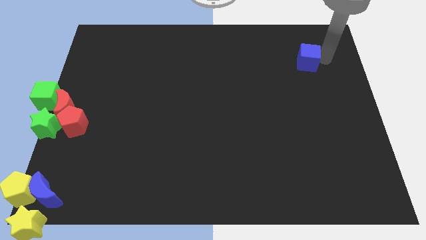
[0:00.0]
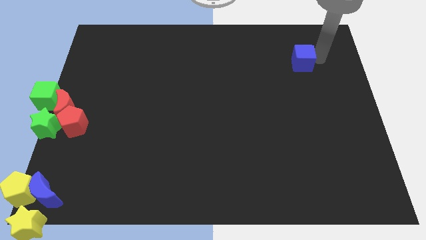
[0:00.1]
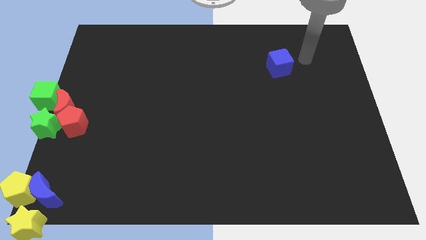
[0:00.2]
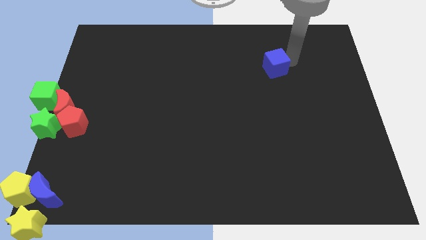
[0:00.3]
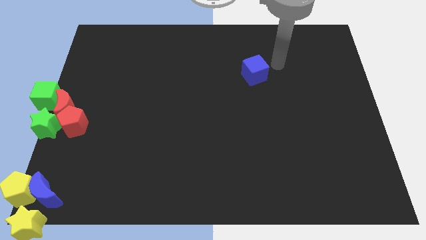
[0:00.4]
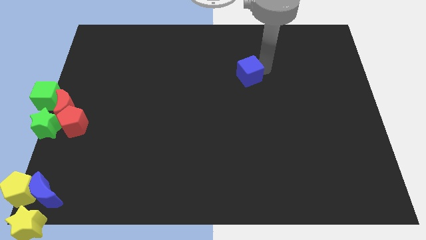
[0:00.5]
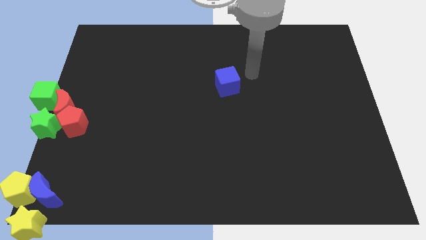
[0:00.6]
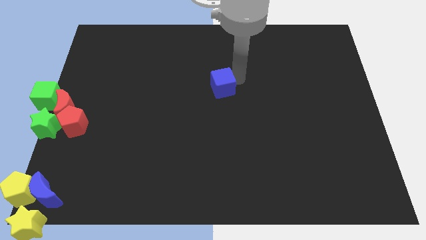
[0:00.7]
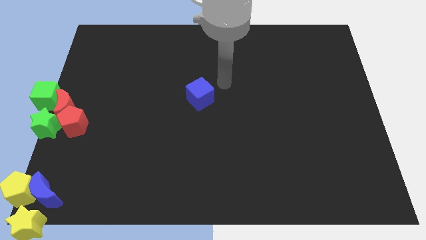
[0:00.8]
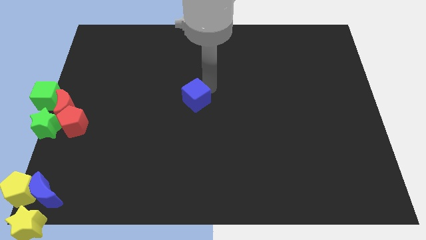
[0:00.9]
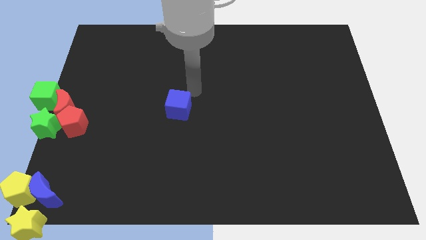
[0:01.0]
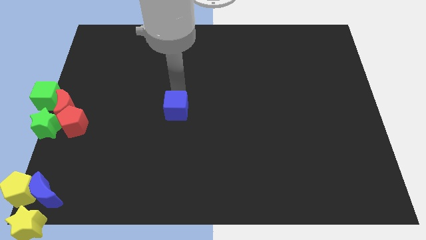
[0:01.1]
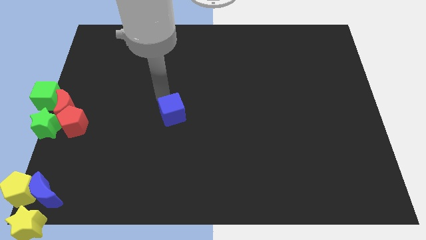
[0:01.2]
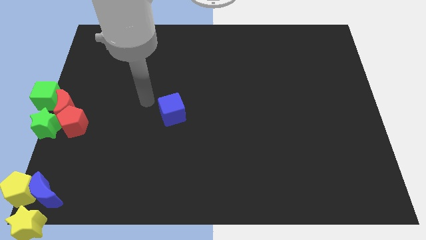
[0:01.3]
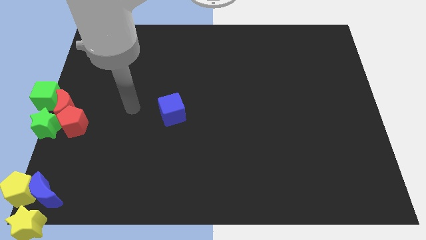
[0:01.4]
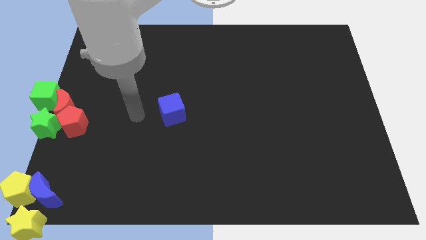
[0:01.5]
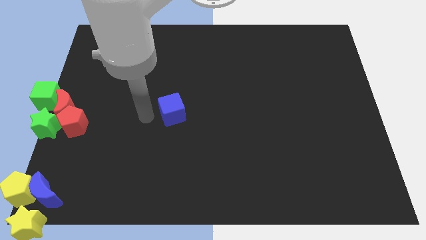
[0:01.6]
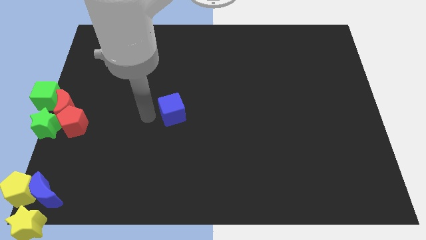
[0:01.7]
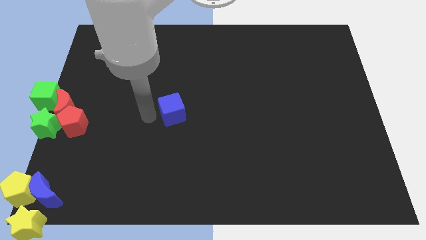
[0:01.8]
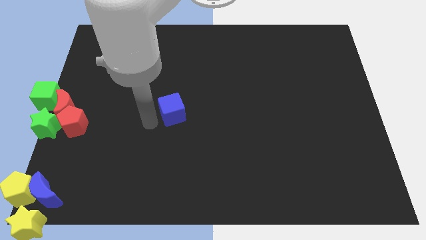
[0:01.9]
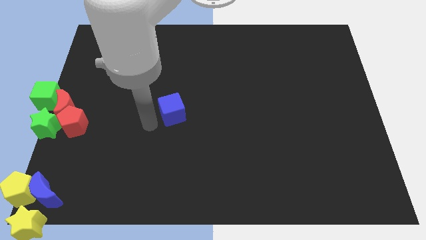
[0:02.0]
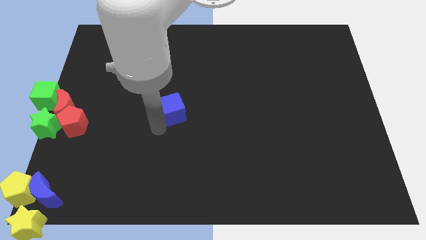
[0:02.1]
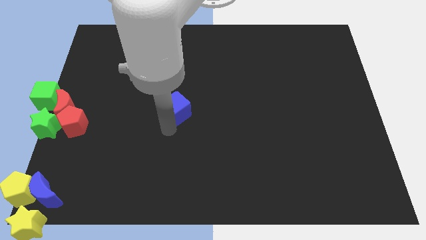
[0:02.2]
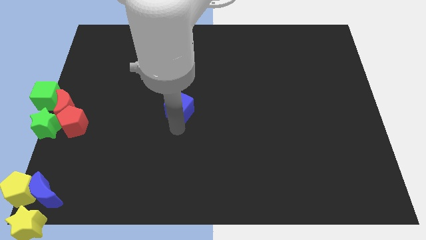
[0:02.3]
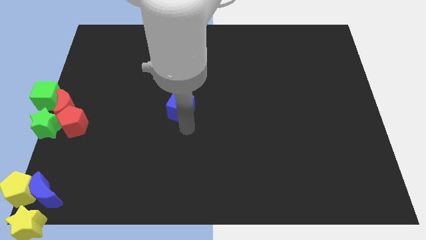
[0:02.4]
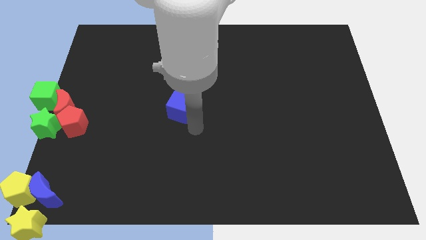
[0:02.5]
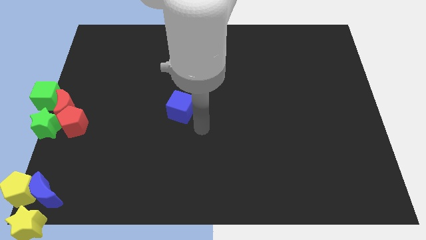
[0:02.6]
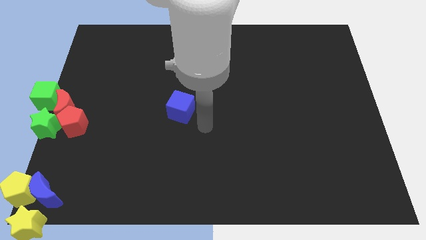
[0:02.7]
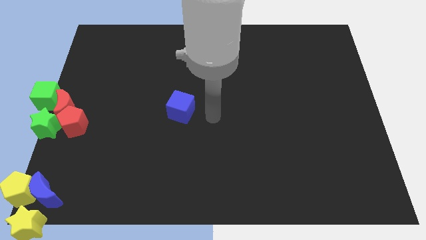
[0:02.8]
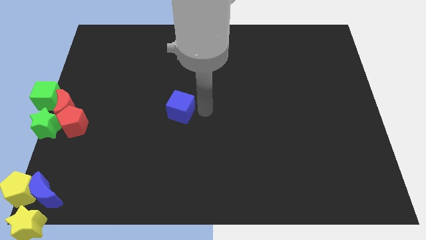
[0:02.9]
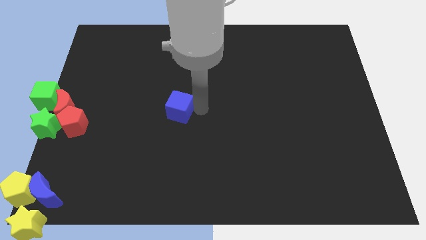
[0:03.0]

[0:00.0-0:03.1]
push blue cube towards the center of the board

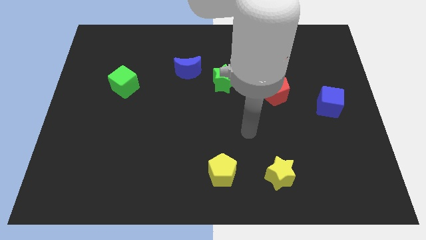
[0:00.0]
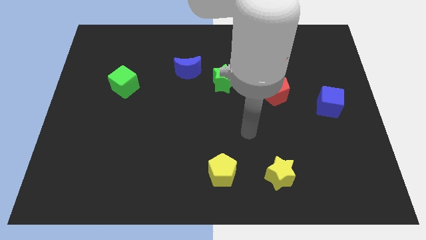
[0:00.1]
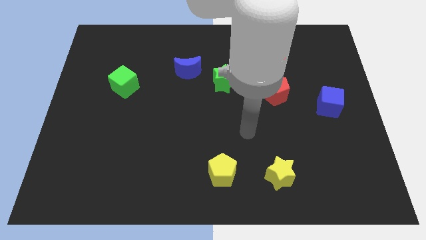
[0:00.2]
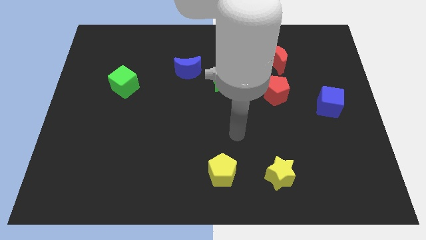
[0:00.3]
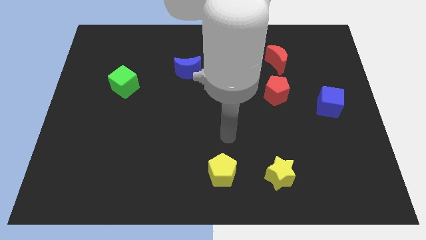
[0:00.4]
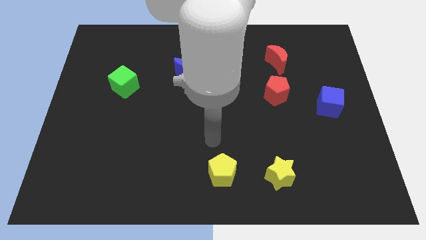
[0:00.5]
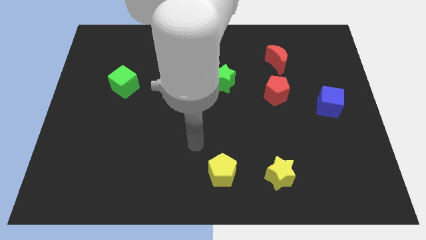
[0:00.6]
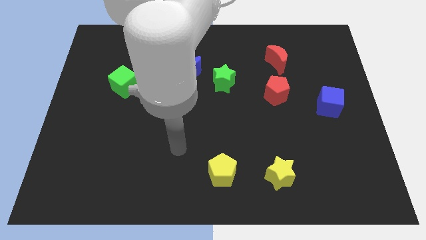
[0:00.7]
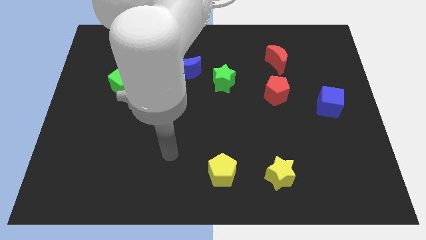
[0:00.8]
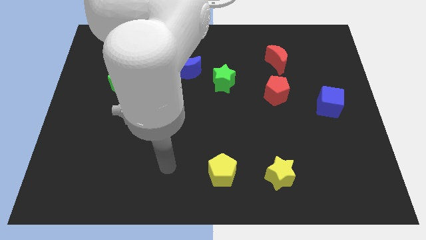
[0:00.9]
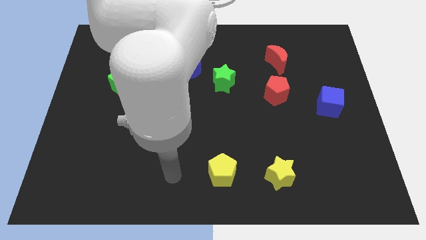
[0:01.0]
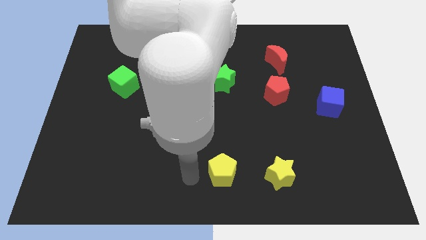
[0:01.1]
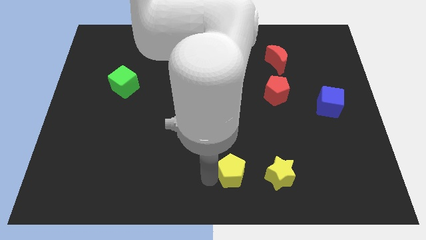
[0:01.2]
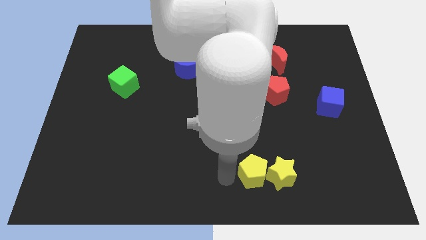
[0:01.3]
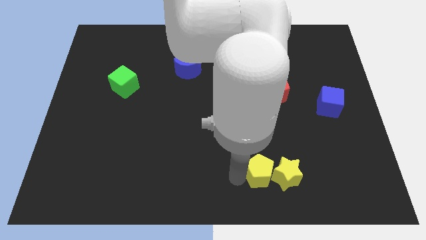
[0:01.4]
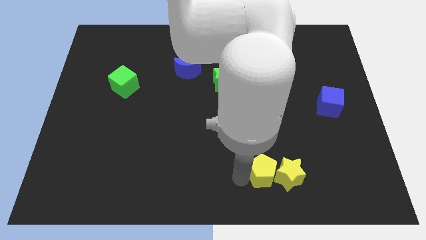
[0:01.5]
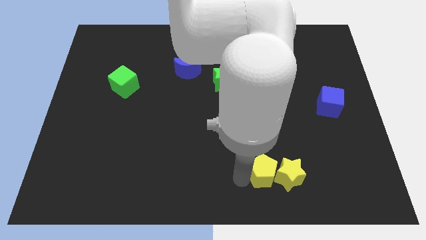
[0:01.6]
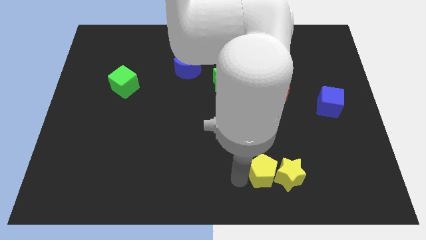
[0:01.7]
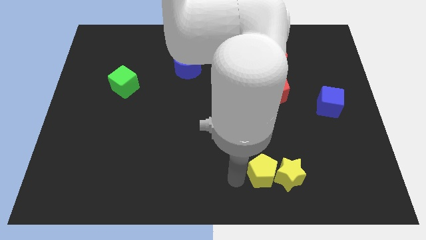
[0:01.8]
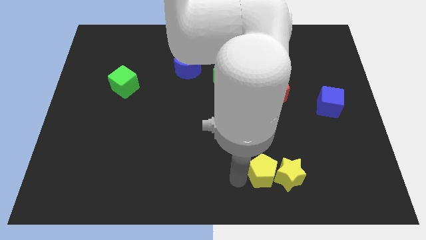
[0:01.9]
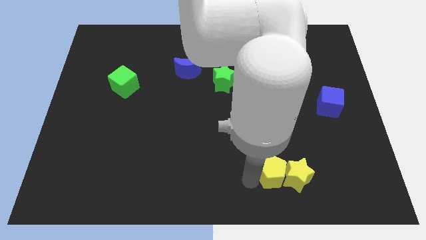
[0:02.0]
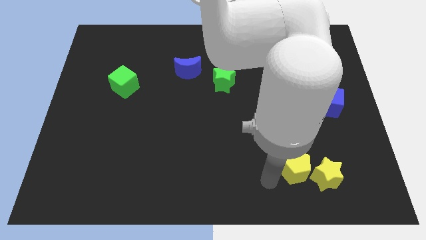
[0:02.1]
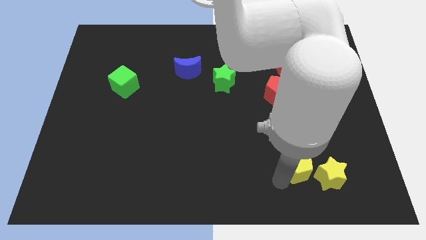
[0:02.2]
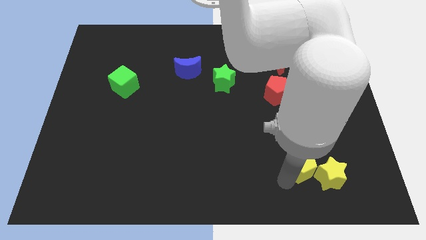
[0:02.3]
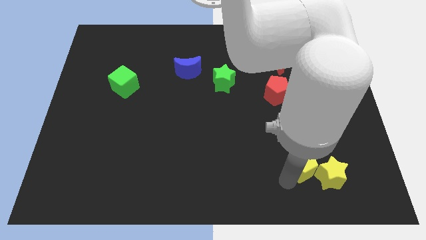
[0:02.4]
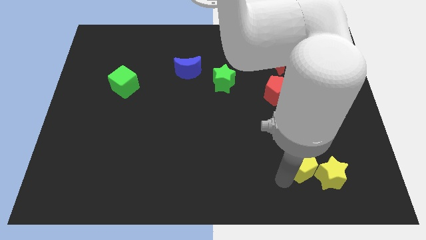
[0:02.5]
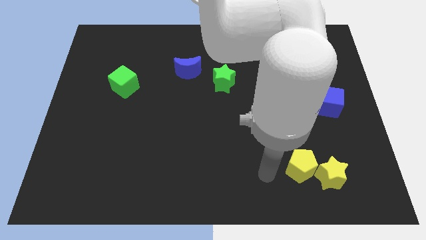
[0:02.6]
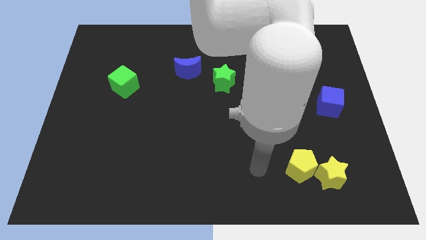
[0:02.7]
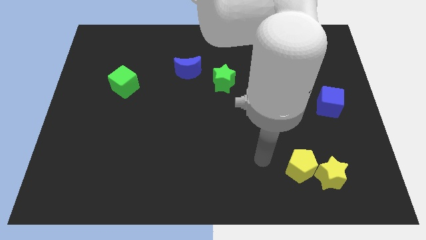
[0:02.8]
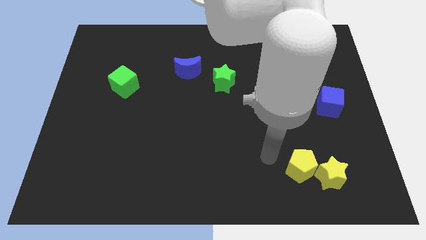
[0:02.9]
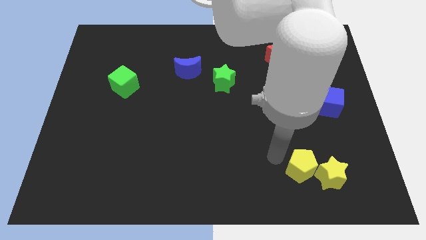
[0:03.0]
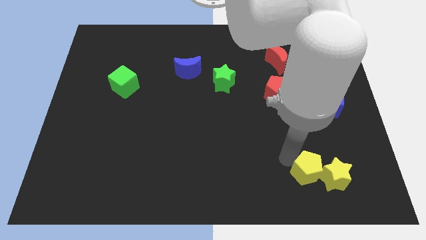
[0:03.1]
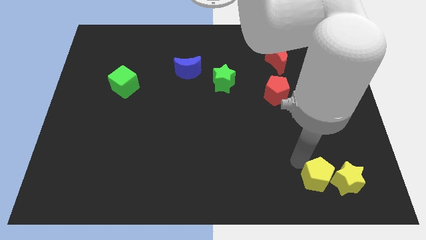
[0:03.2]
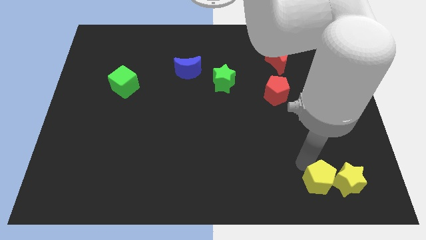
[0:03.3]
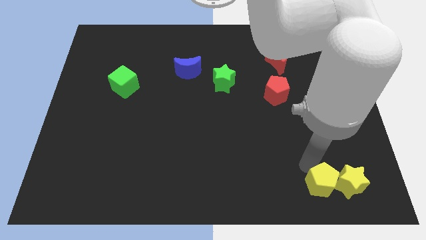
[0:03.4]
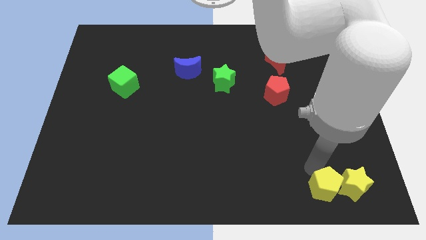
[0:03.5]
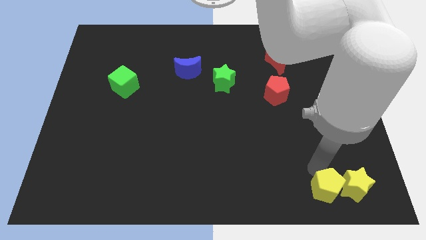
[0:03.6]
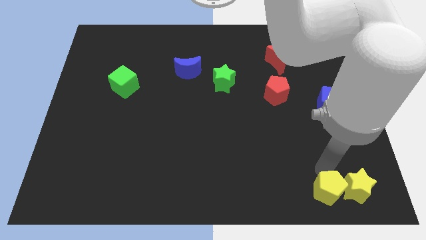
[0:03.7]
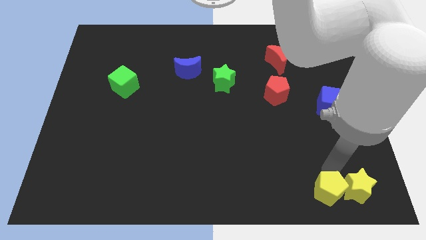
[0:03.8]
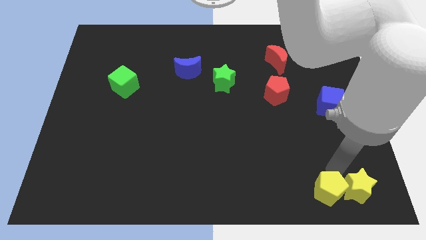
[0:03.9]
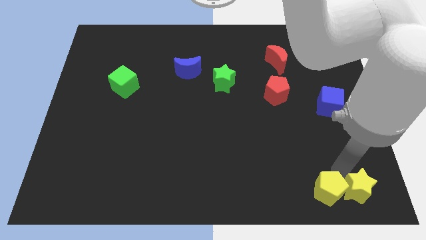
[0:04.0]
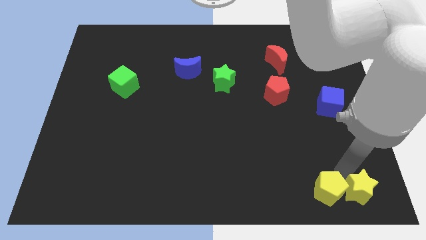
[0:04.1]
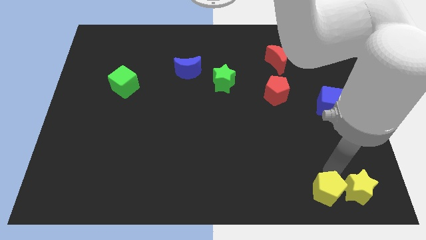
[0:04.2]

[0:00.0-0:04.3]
push the yellow blocks towards the bottom right

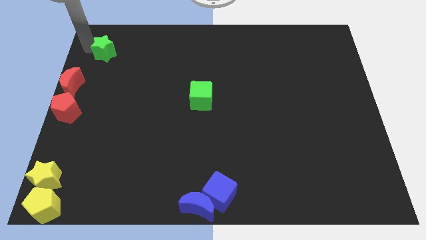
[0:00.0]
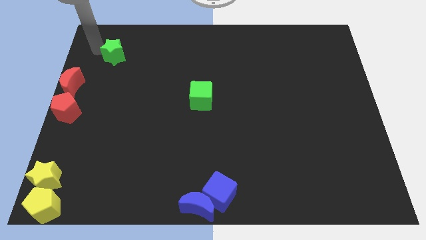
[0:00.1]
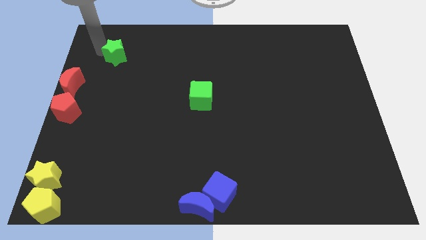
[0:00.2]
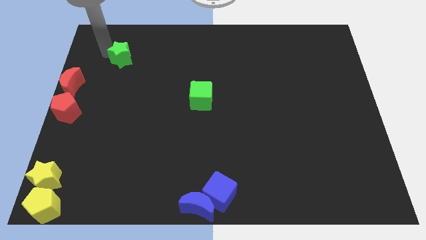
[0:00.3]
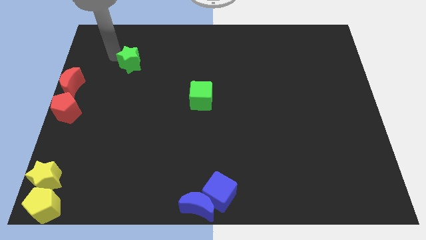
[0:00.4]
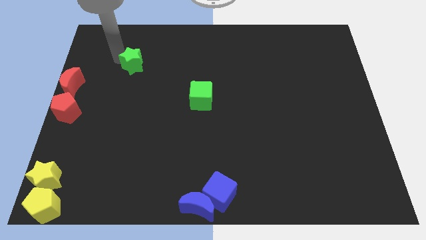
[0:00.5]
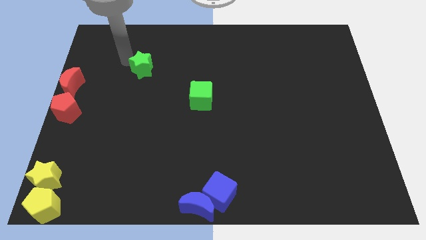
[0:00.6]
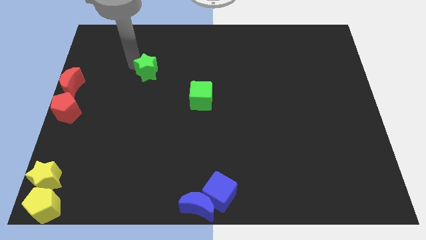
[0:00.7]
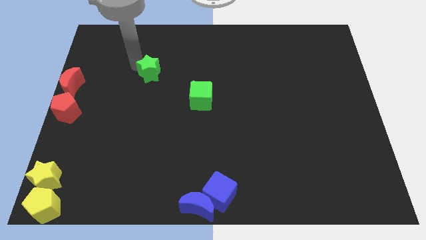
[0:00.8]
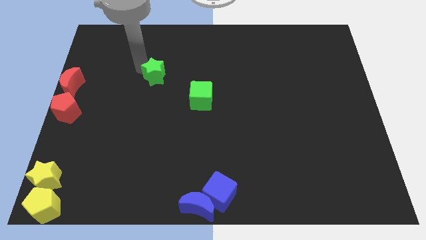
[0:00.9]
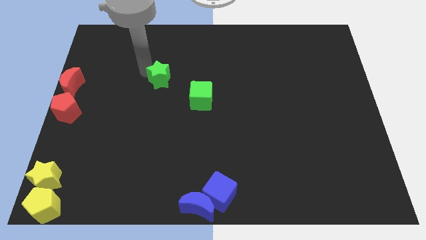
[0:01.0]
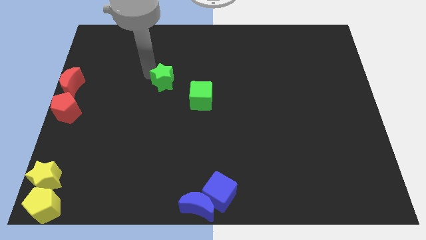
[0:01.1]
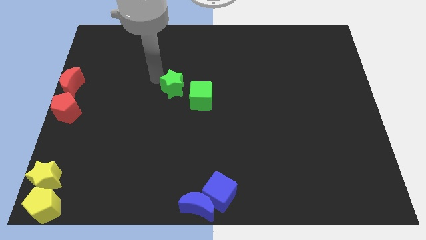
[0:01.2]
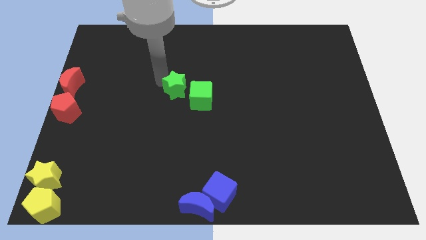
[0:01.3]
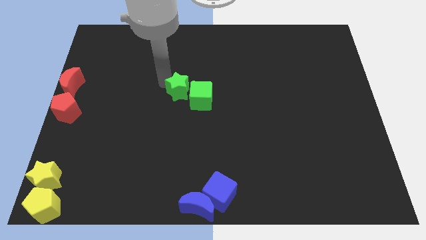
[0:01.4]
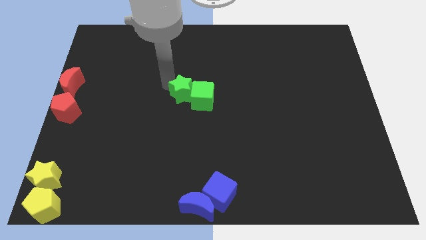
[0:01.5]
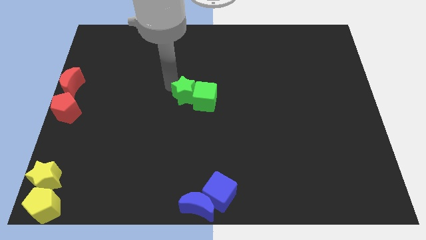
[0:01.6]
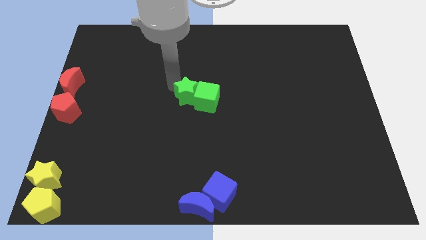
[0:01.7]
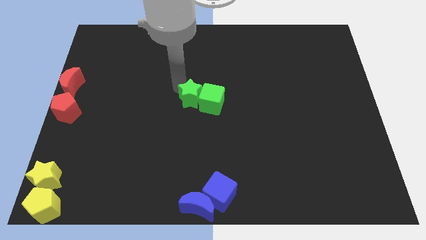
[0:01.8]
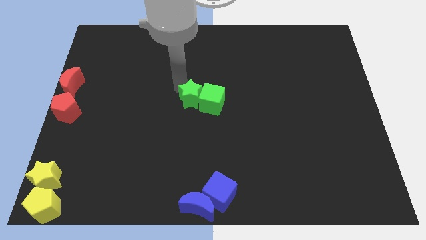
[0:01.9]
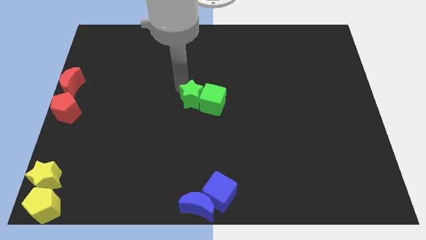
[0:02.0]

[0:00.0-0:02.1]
move the green star left to green cube
